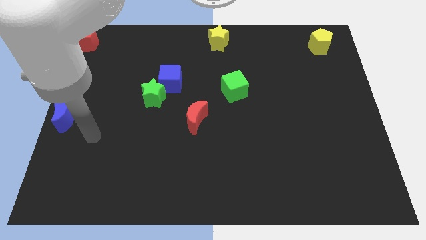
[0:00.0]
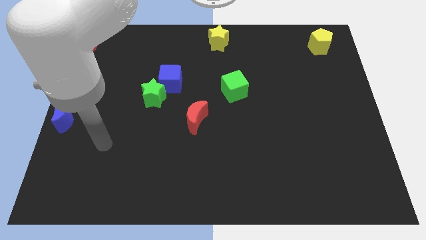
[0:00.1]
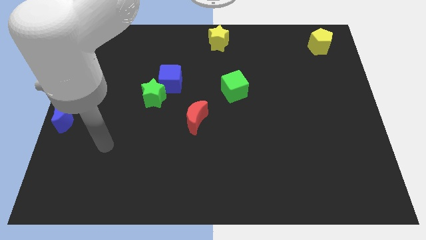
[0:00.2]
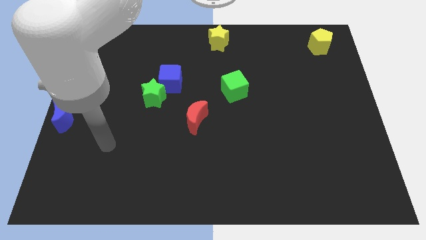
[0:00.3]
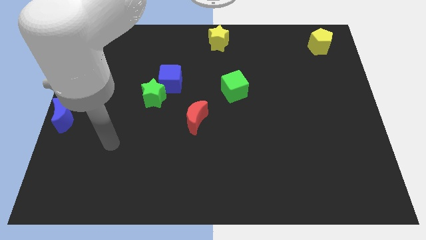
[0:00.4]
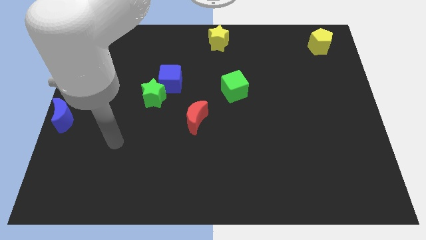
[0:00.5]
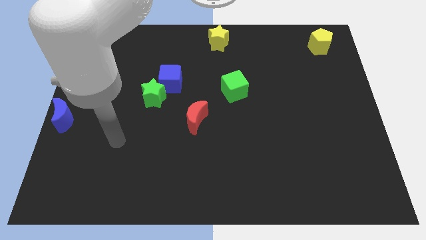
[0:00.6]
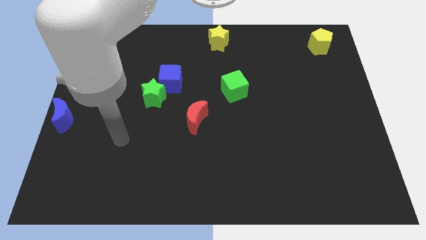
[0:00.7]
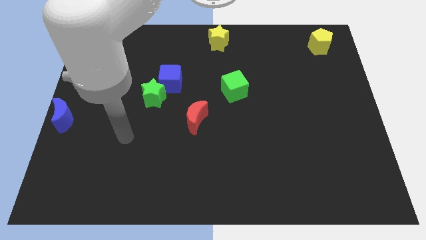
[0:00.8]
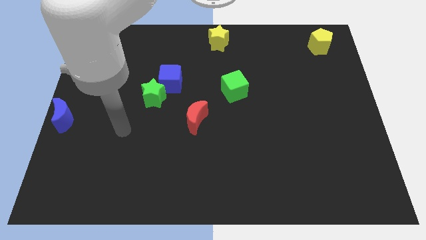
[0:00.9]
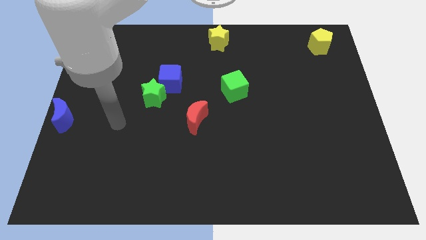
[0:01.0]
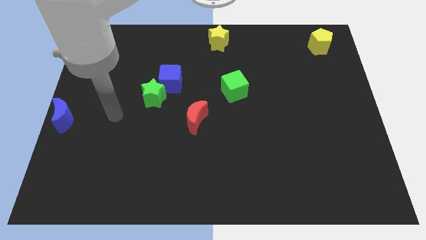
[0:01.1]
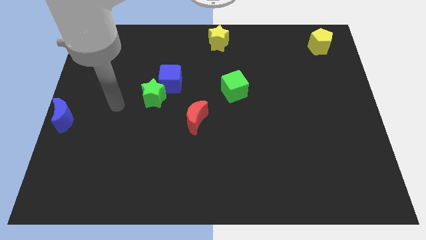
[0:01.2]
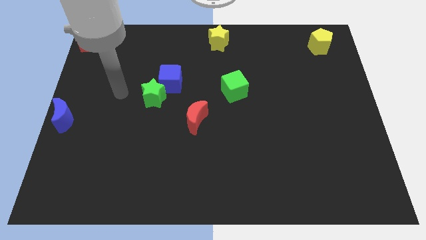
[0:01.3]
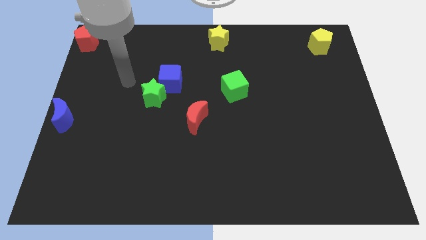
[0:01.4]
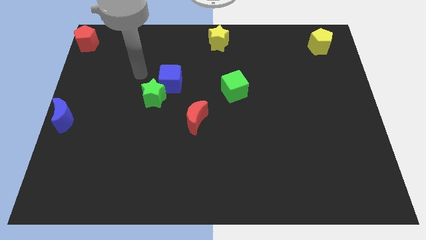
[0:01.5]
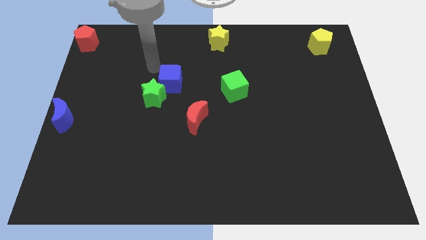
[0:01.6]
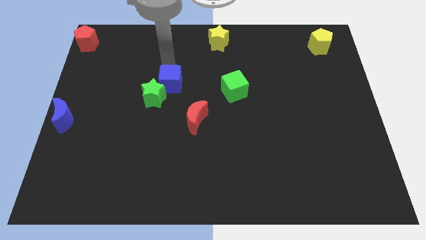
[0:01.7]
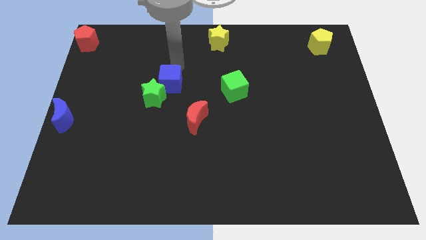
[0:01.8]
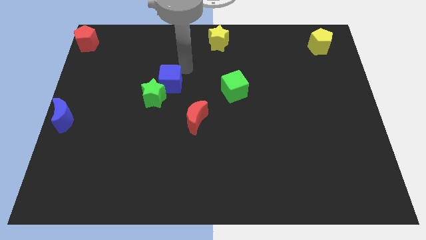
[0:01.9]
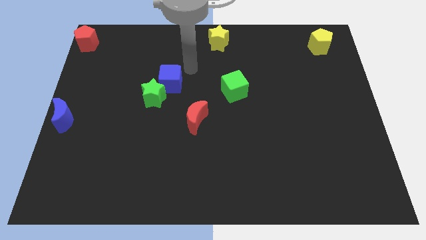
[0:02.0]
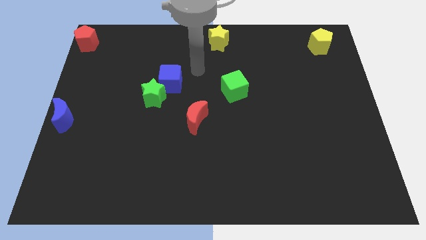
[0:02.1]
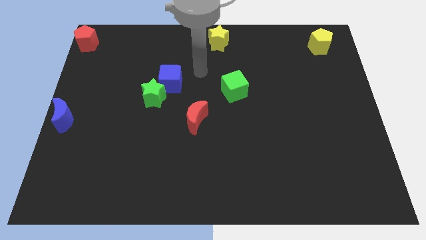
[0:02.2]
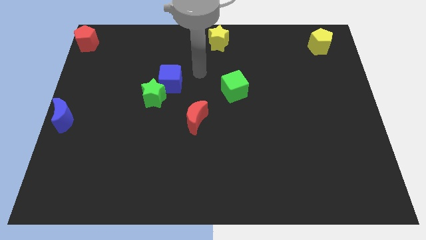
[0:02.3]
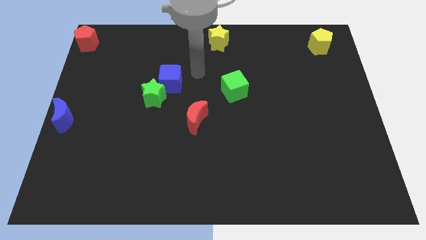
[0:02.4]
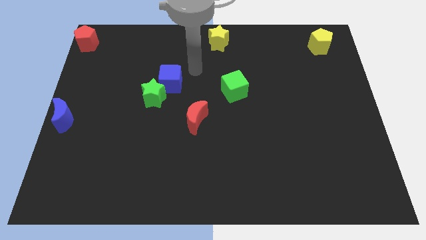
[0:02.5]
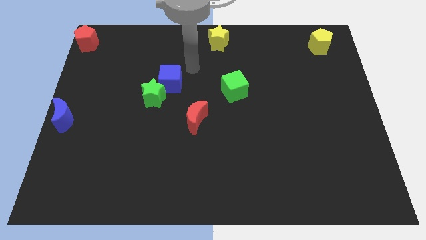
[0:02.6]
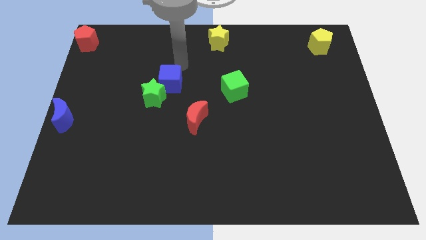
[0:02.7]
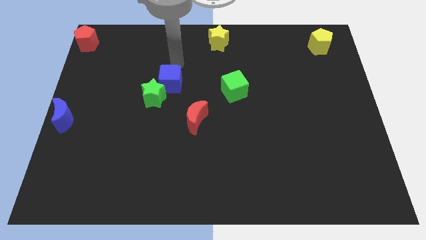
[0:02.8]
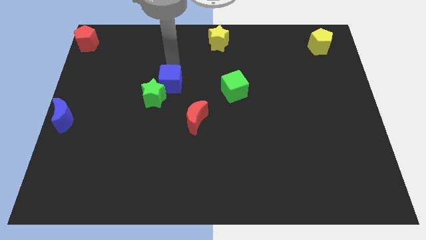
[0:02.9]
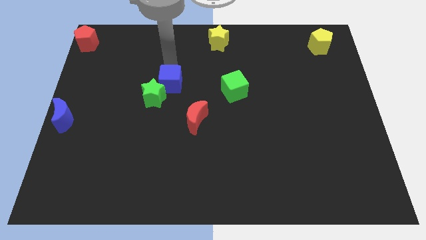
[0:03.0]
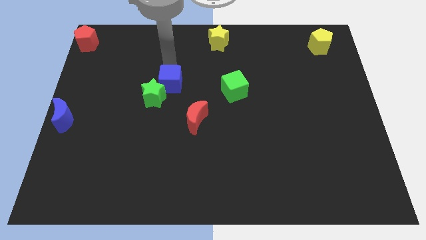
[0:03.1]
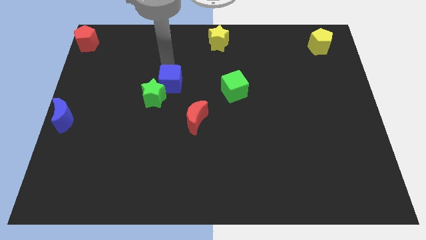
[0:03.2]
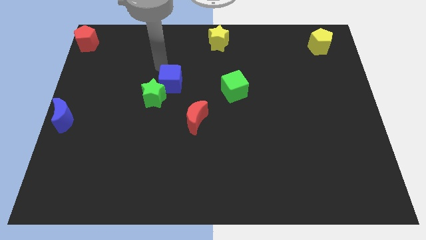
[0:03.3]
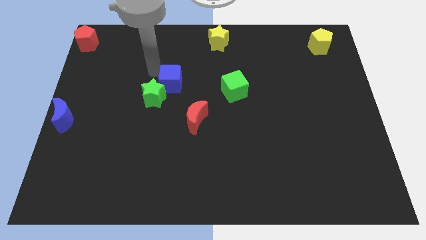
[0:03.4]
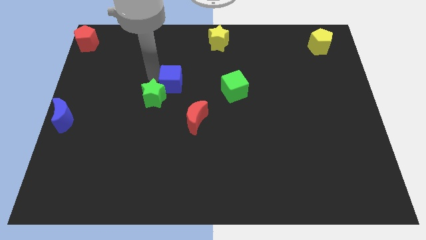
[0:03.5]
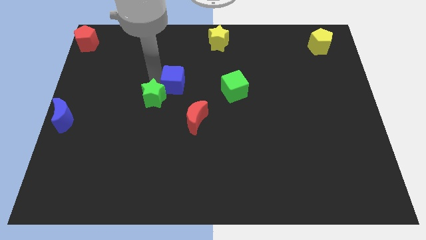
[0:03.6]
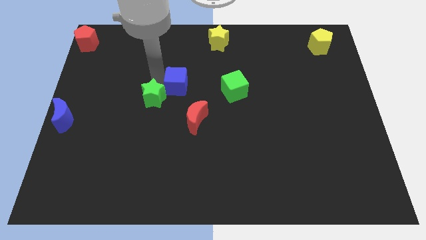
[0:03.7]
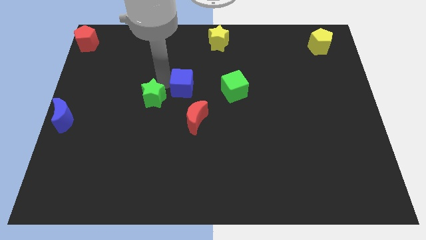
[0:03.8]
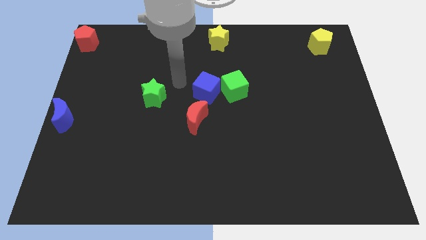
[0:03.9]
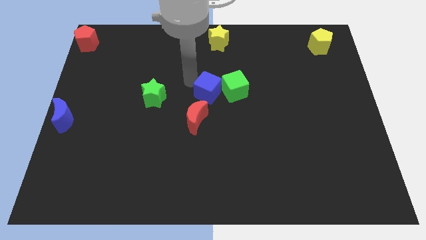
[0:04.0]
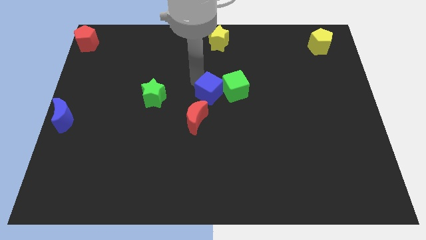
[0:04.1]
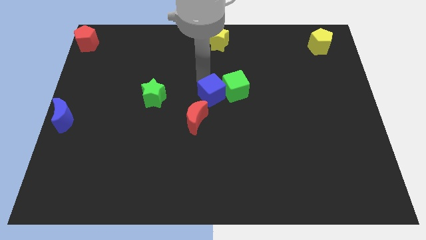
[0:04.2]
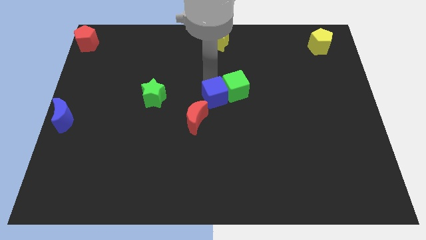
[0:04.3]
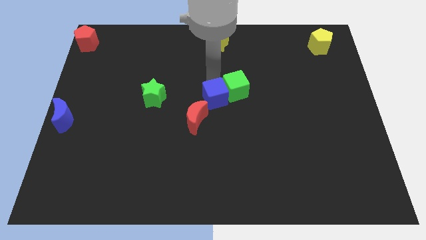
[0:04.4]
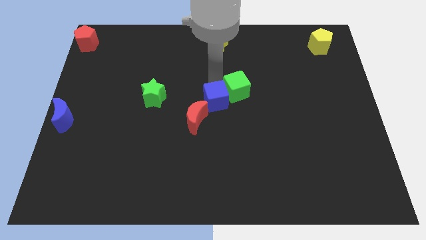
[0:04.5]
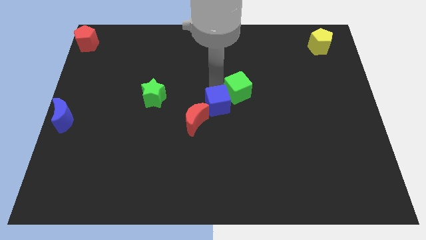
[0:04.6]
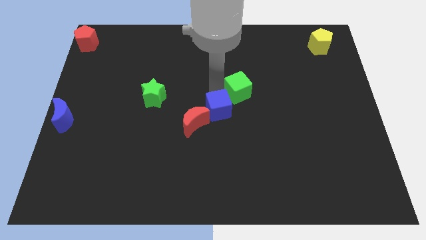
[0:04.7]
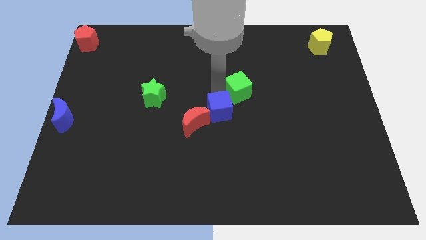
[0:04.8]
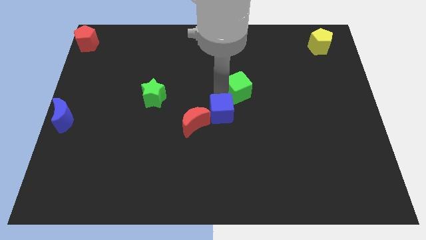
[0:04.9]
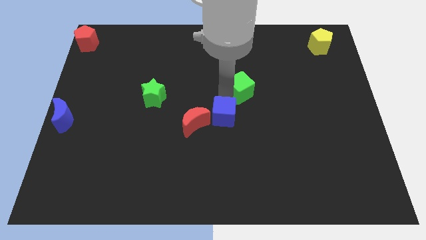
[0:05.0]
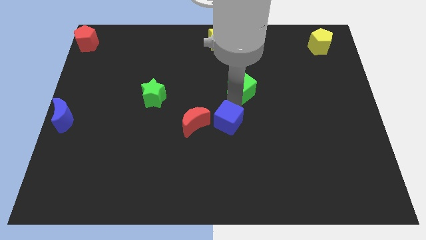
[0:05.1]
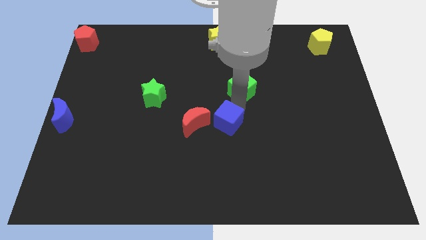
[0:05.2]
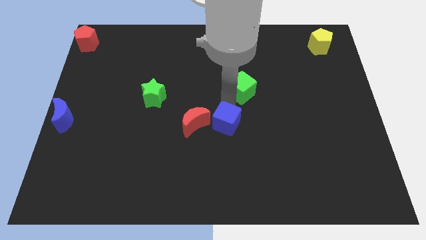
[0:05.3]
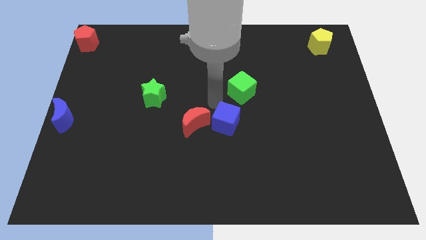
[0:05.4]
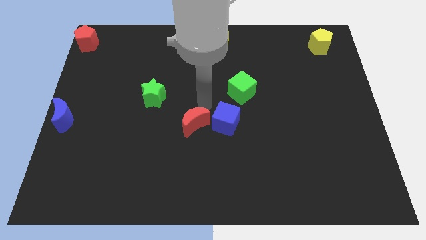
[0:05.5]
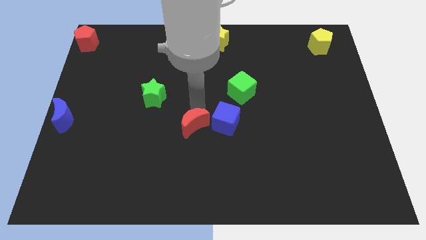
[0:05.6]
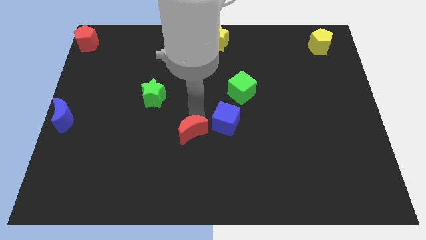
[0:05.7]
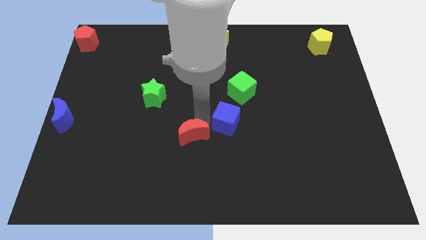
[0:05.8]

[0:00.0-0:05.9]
move the blue cube to the center of the board

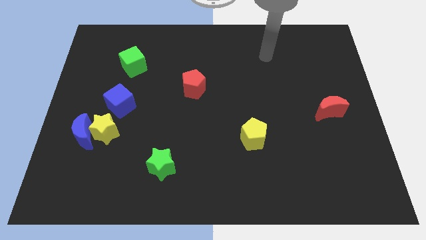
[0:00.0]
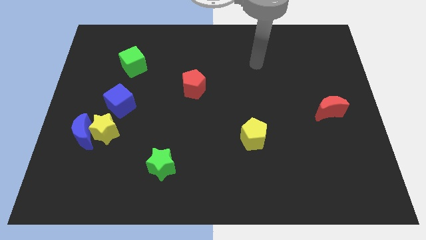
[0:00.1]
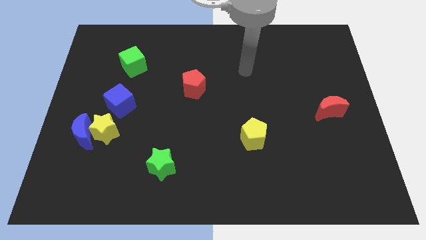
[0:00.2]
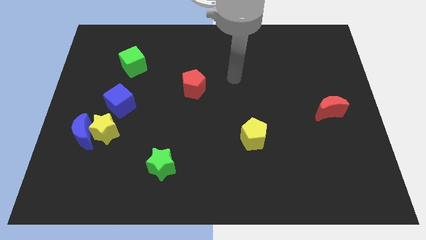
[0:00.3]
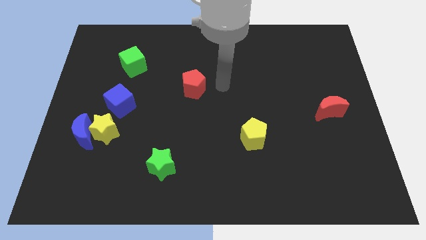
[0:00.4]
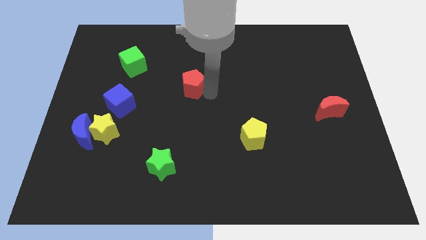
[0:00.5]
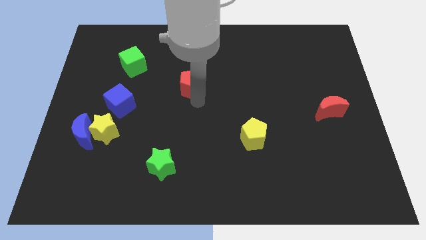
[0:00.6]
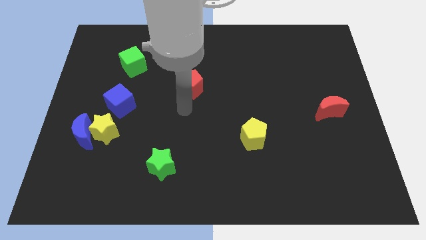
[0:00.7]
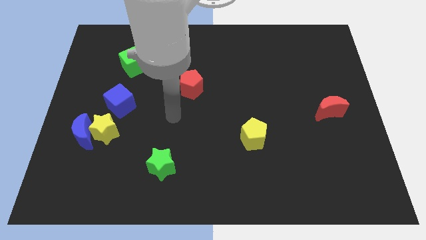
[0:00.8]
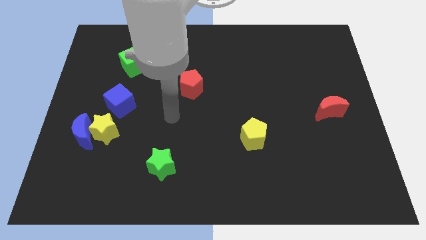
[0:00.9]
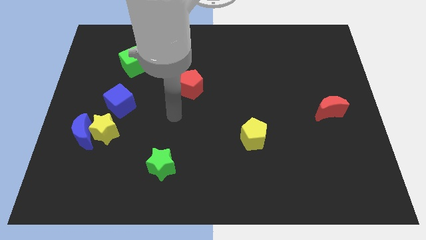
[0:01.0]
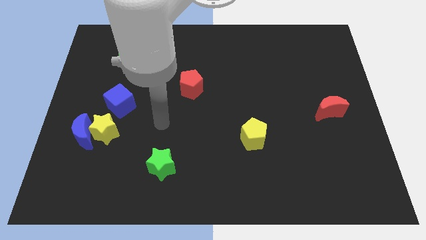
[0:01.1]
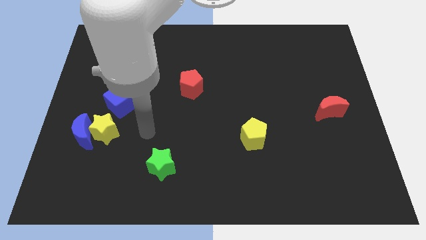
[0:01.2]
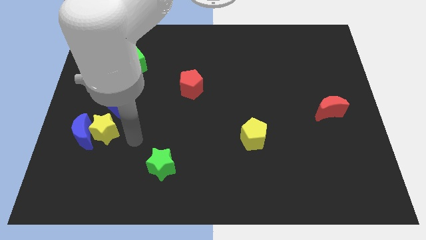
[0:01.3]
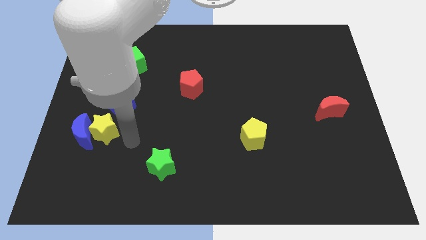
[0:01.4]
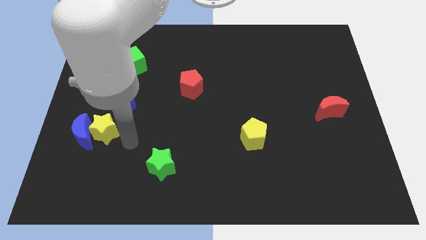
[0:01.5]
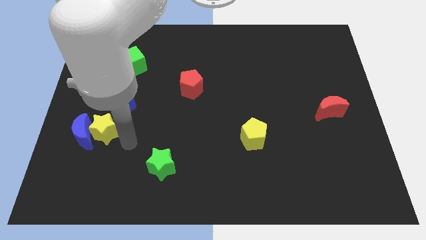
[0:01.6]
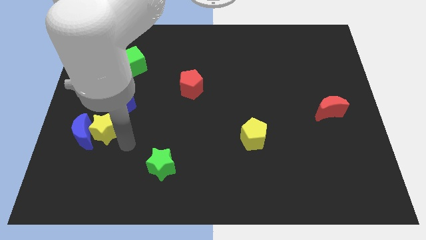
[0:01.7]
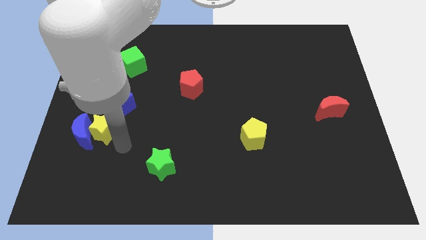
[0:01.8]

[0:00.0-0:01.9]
move your arm closer to the yellow star

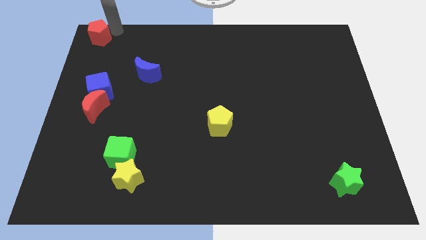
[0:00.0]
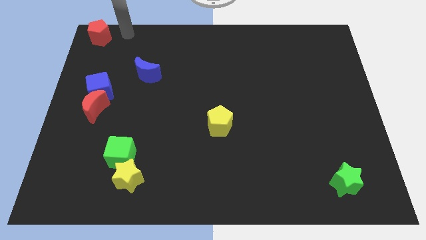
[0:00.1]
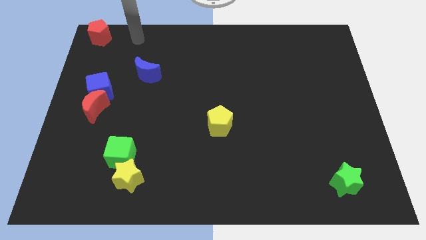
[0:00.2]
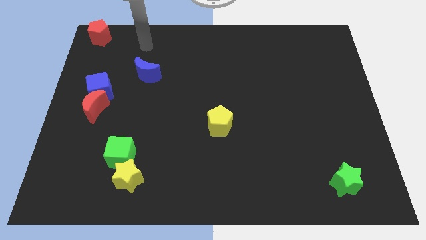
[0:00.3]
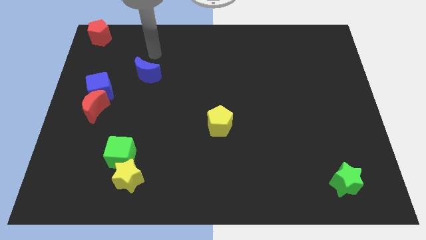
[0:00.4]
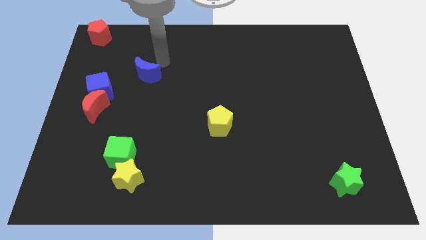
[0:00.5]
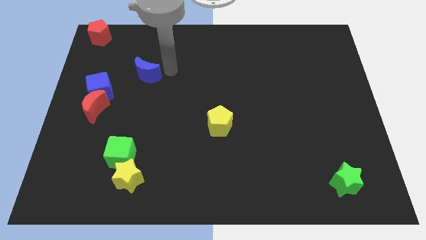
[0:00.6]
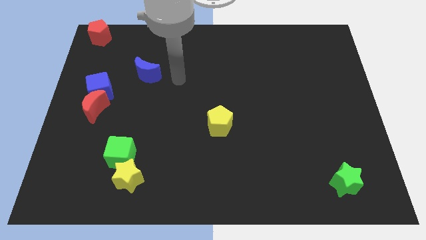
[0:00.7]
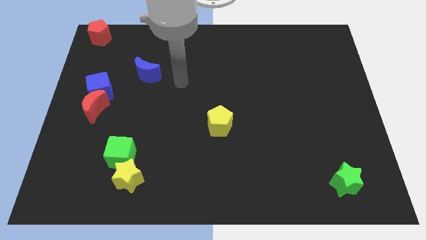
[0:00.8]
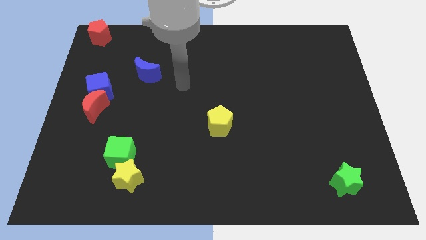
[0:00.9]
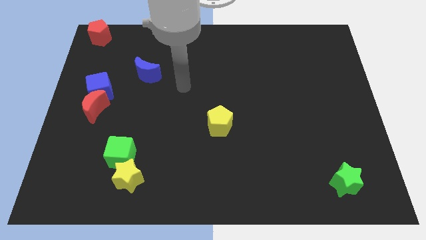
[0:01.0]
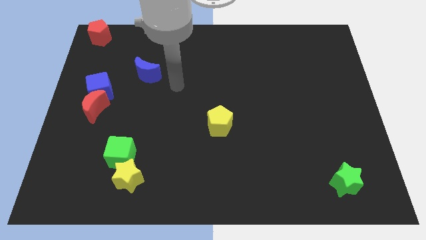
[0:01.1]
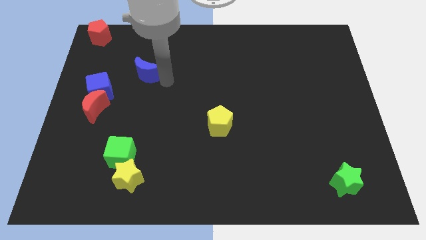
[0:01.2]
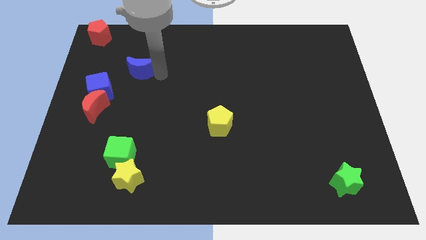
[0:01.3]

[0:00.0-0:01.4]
move your arm away from the red pentagon
